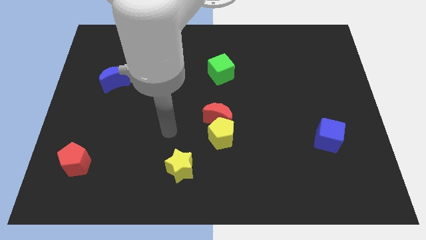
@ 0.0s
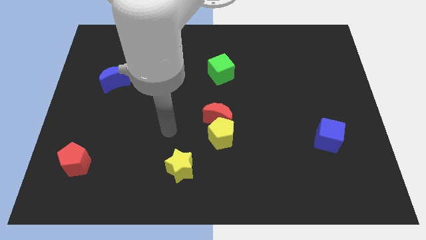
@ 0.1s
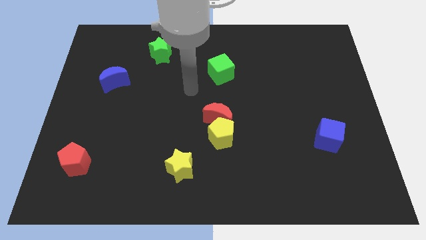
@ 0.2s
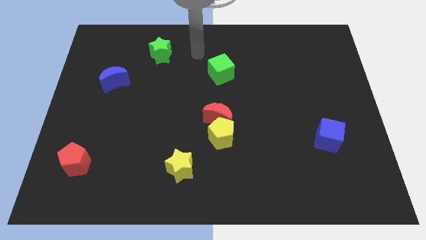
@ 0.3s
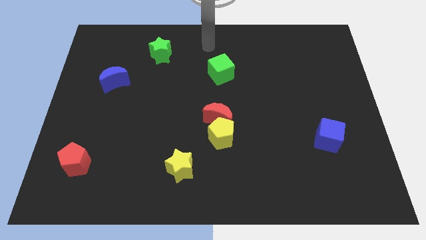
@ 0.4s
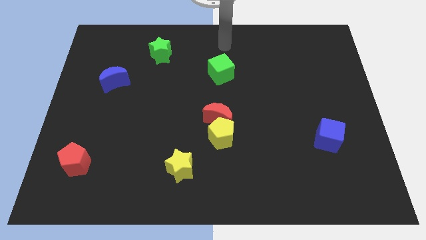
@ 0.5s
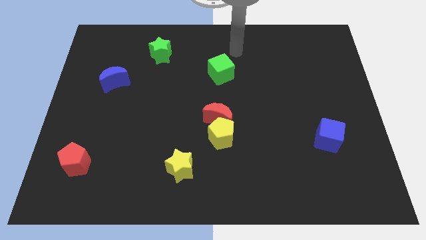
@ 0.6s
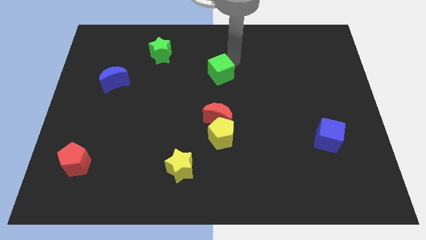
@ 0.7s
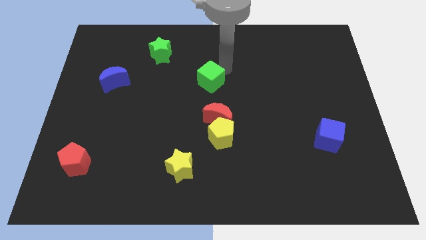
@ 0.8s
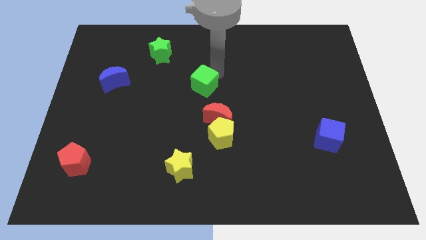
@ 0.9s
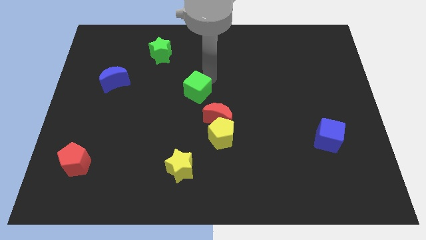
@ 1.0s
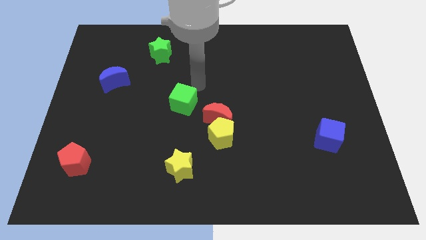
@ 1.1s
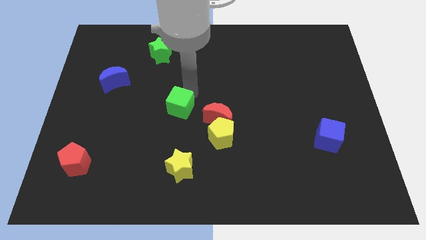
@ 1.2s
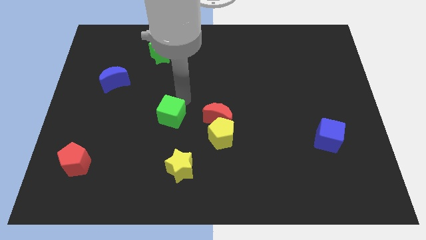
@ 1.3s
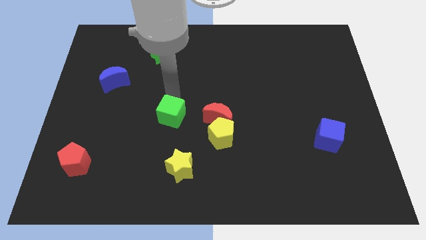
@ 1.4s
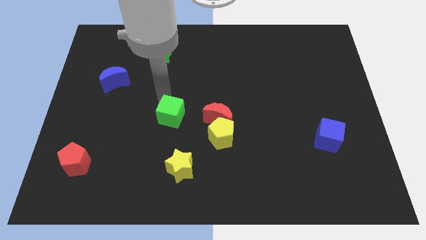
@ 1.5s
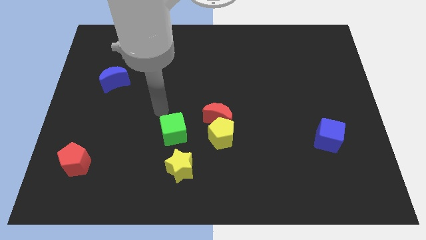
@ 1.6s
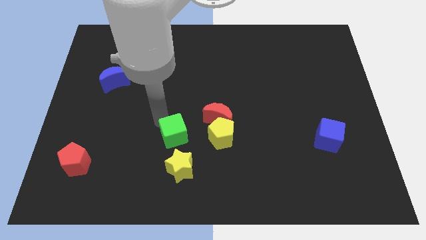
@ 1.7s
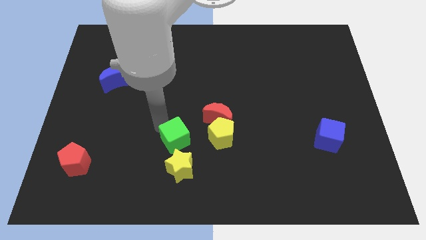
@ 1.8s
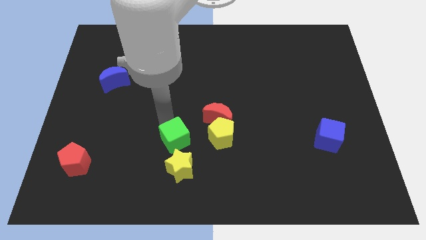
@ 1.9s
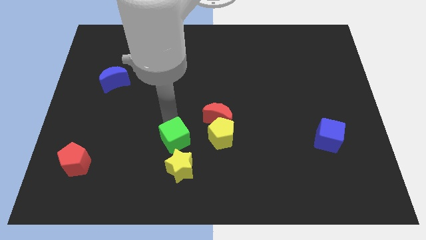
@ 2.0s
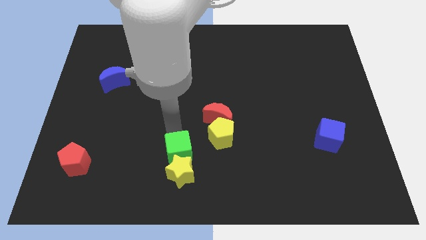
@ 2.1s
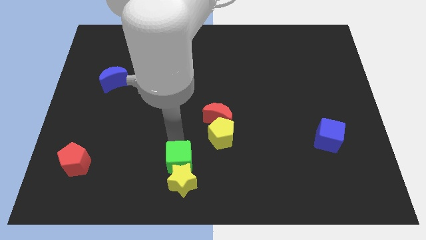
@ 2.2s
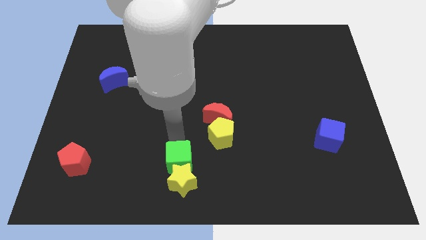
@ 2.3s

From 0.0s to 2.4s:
put the green cube close to the yellow star

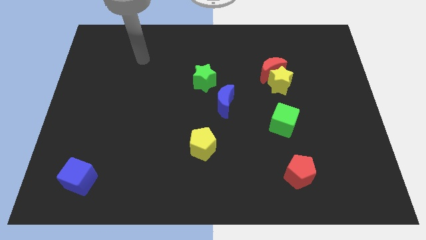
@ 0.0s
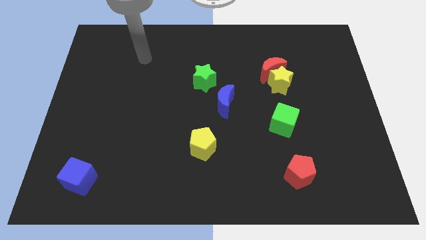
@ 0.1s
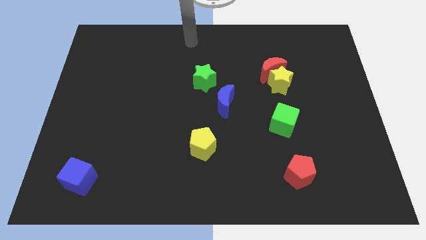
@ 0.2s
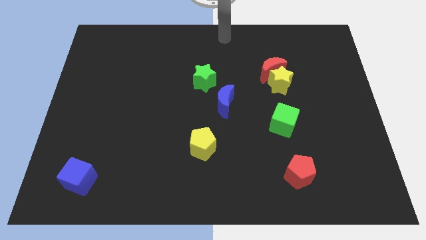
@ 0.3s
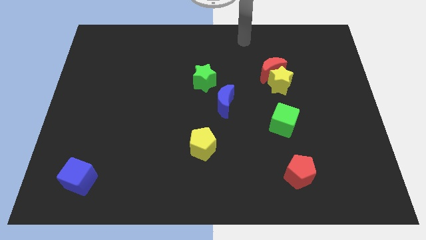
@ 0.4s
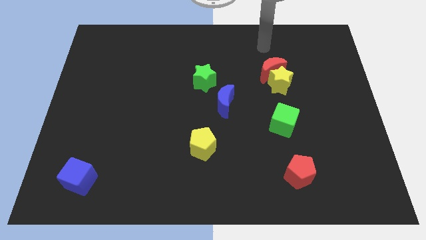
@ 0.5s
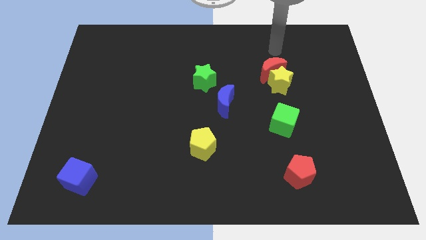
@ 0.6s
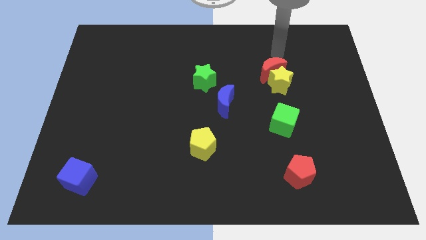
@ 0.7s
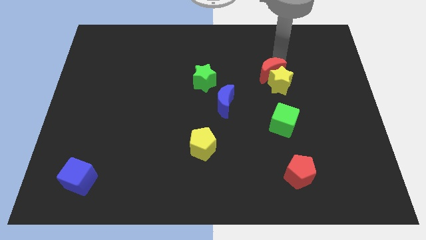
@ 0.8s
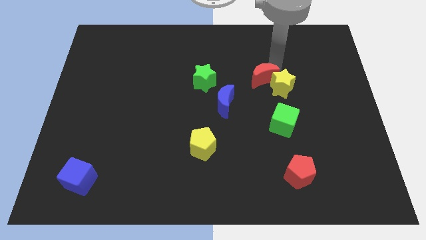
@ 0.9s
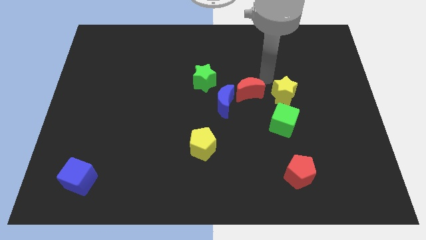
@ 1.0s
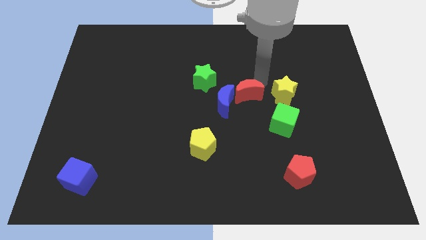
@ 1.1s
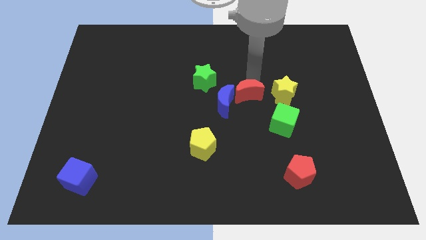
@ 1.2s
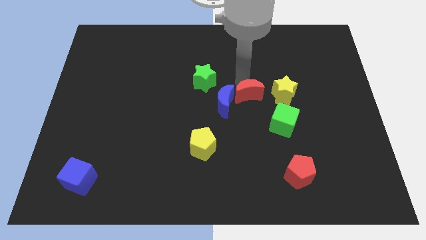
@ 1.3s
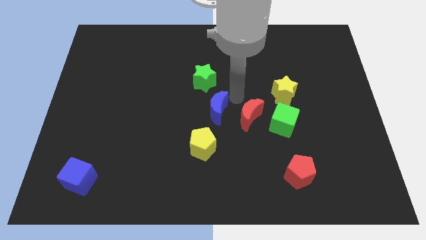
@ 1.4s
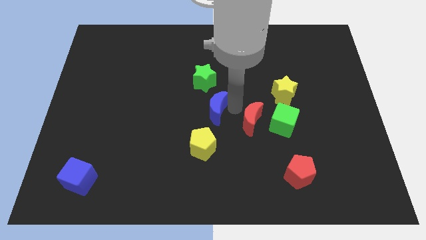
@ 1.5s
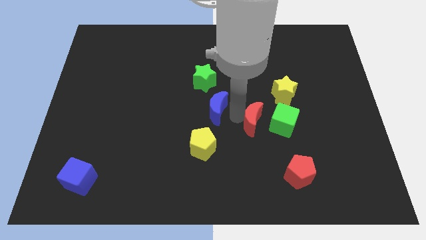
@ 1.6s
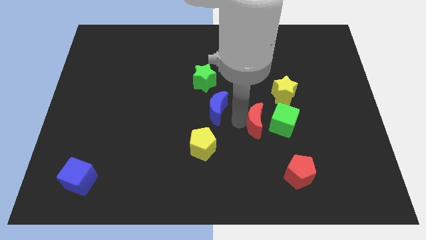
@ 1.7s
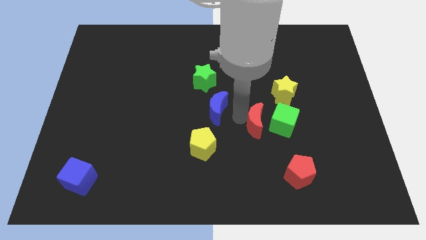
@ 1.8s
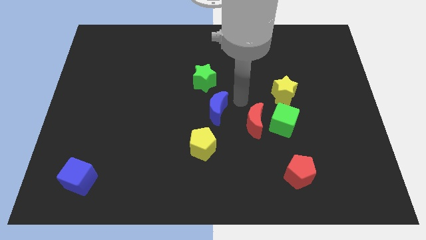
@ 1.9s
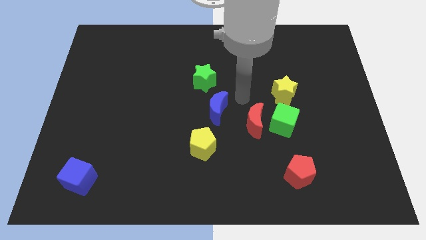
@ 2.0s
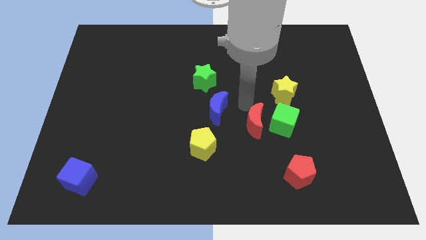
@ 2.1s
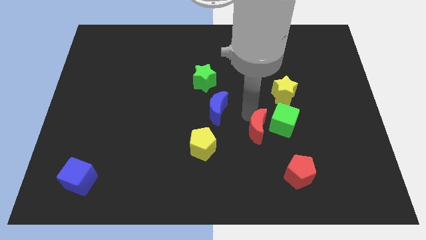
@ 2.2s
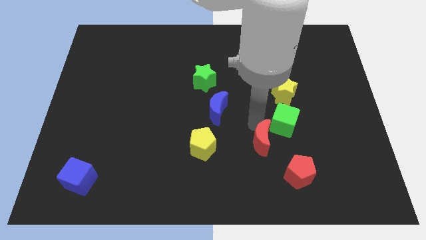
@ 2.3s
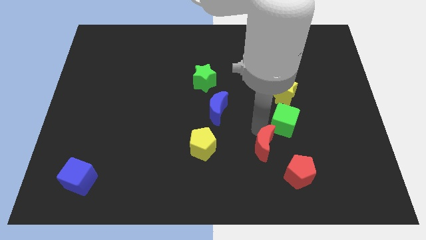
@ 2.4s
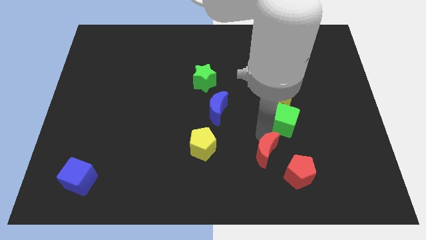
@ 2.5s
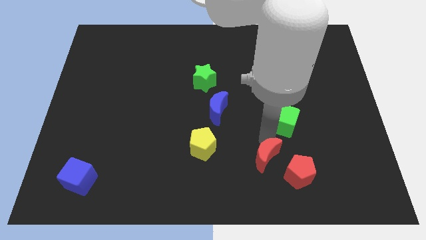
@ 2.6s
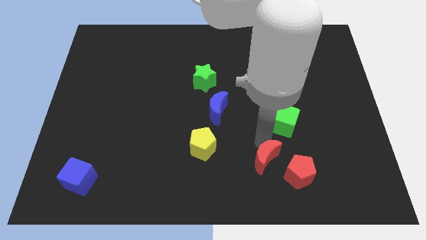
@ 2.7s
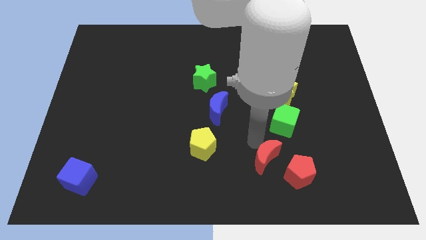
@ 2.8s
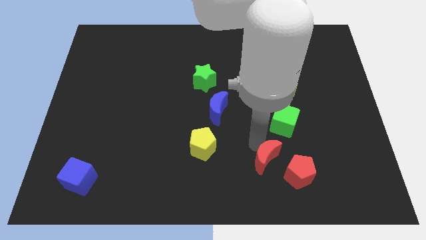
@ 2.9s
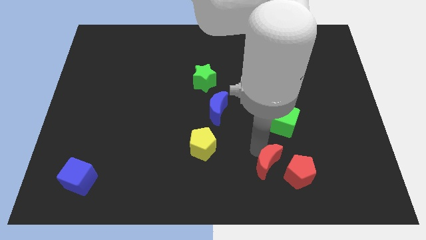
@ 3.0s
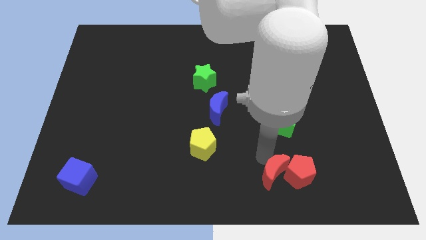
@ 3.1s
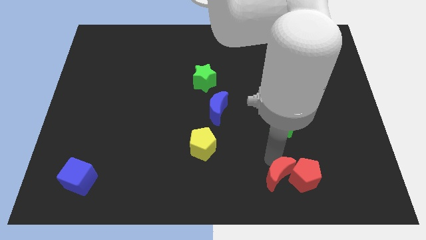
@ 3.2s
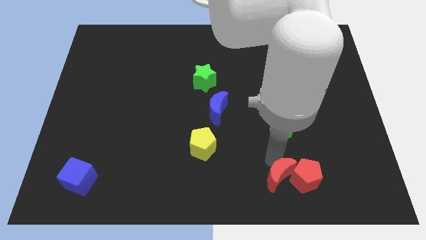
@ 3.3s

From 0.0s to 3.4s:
push the red moon to the red pentagon

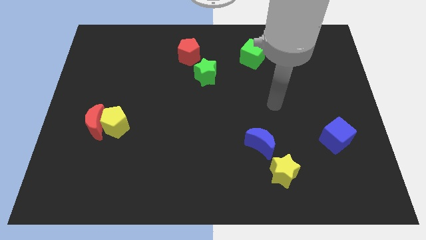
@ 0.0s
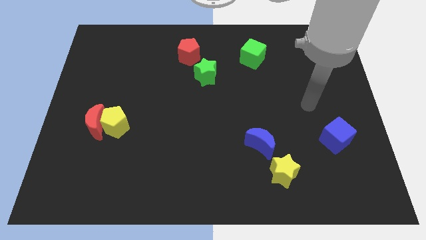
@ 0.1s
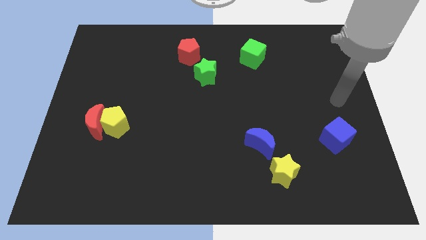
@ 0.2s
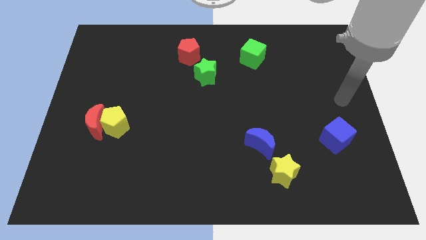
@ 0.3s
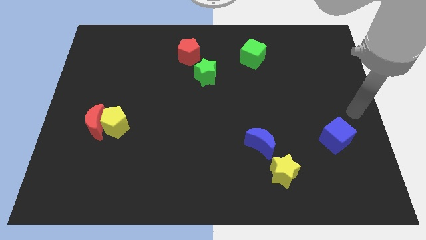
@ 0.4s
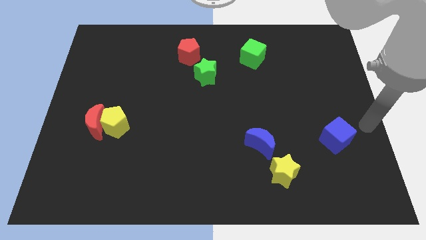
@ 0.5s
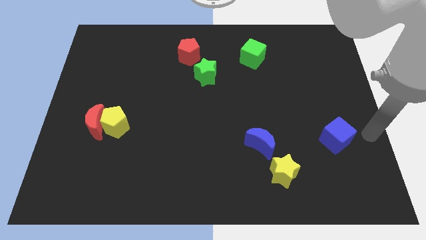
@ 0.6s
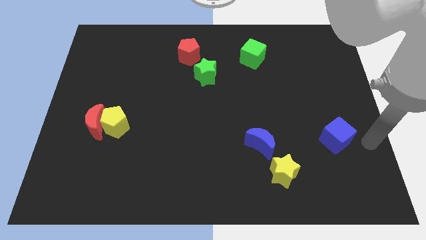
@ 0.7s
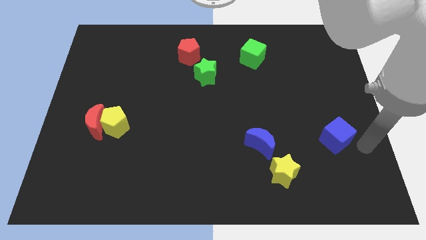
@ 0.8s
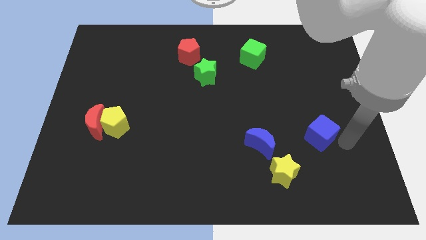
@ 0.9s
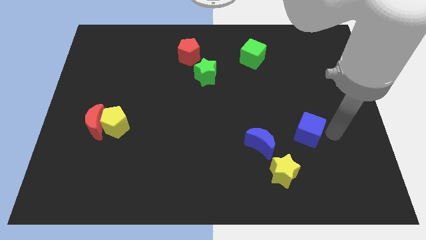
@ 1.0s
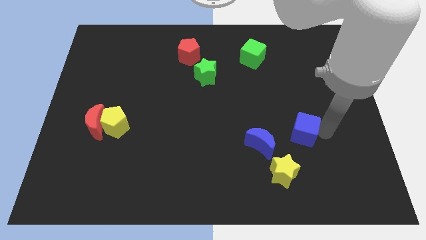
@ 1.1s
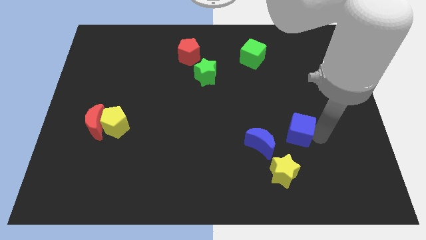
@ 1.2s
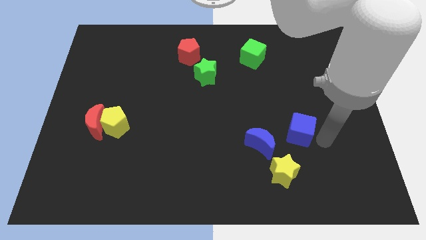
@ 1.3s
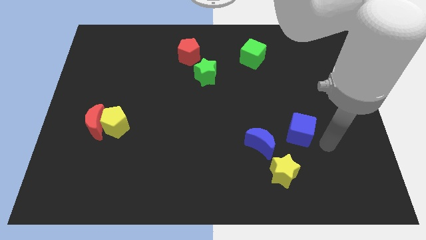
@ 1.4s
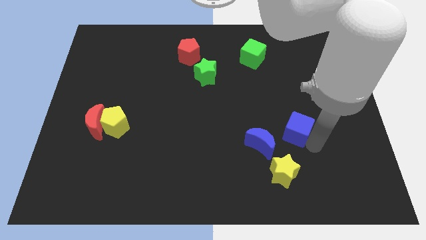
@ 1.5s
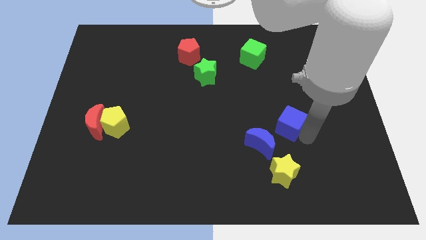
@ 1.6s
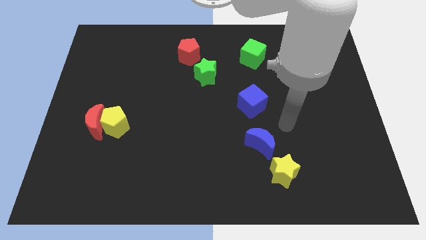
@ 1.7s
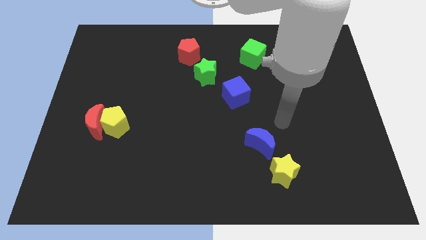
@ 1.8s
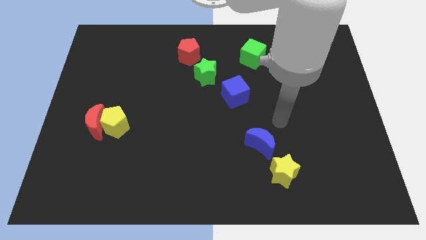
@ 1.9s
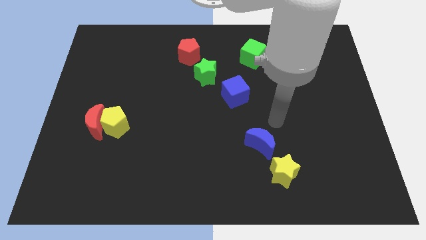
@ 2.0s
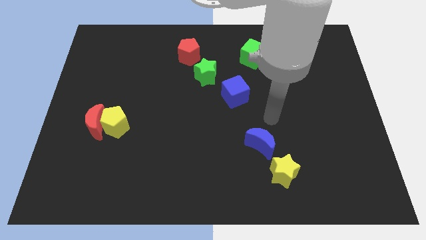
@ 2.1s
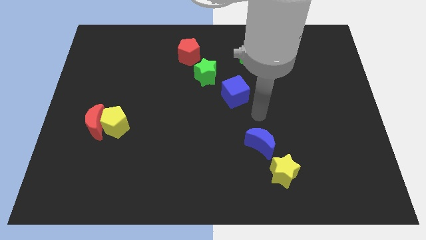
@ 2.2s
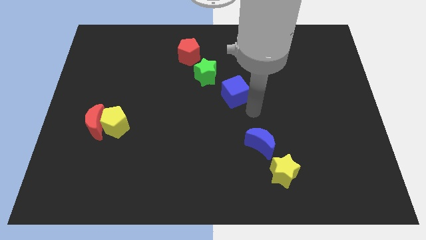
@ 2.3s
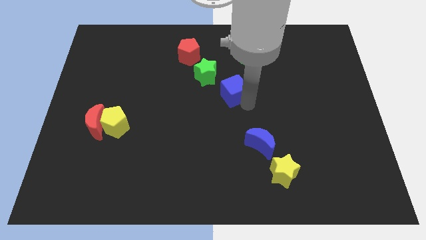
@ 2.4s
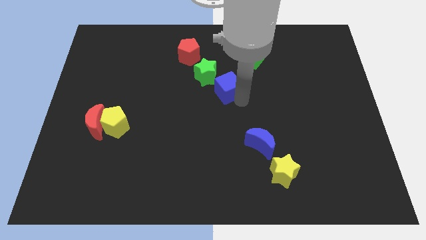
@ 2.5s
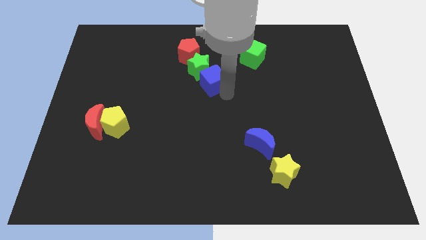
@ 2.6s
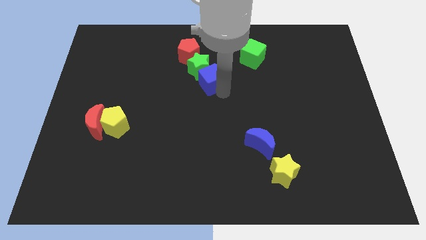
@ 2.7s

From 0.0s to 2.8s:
slide the blue cube to the green star
